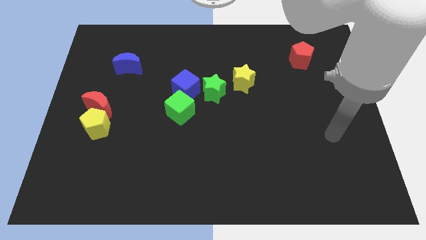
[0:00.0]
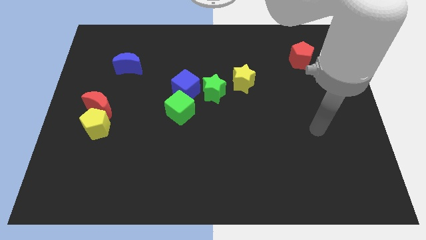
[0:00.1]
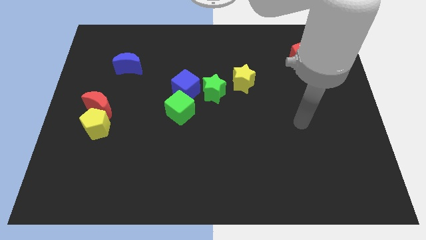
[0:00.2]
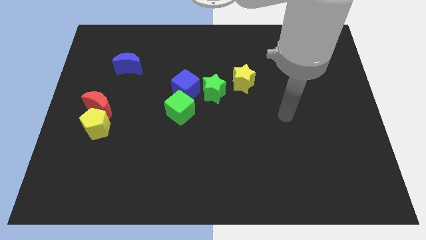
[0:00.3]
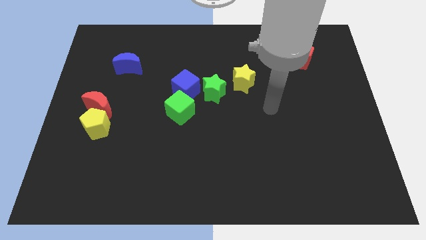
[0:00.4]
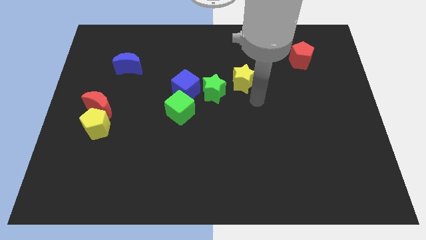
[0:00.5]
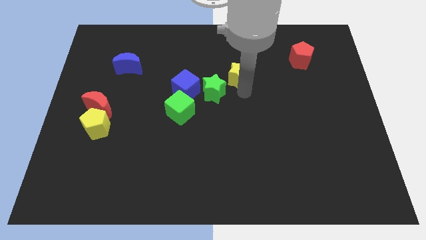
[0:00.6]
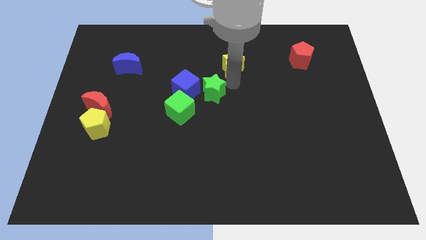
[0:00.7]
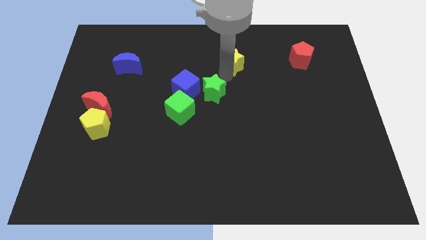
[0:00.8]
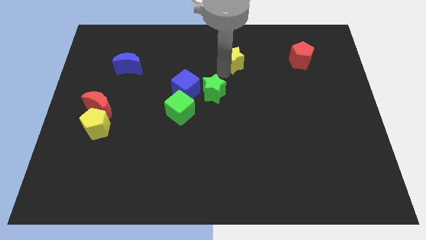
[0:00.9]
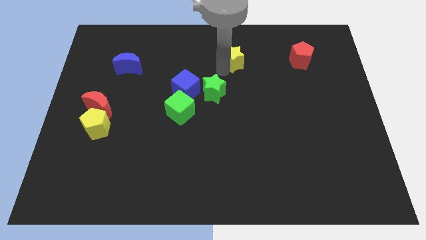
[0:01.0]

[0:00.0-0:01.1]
push the yellow star slightly up

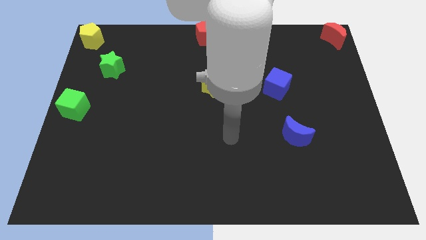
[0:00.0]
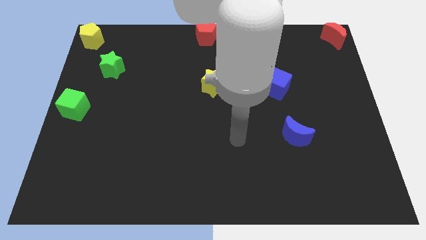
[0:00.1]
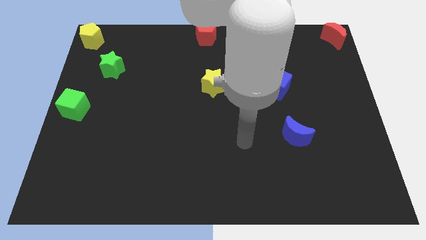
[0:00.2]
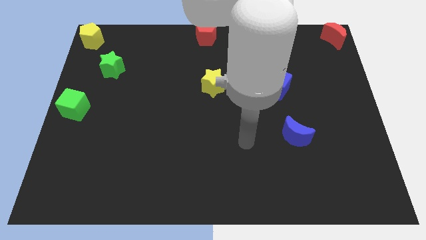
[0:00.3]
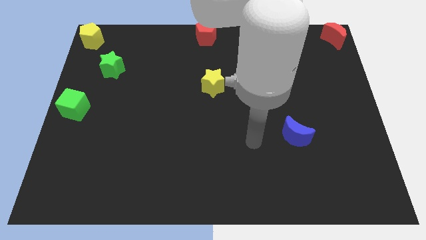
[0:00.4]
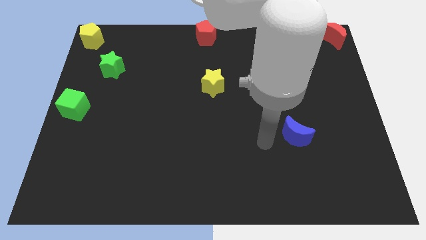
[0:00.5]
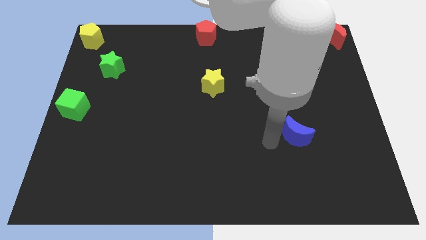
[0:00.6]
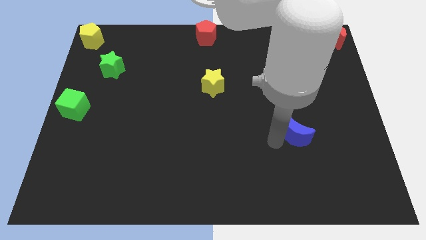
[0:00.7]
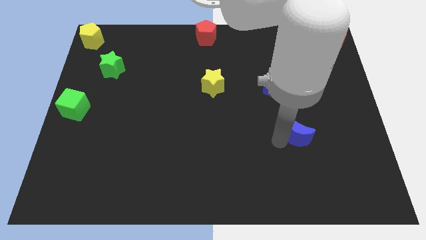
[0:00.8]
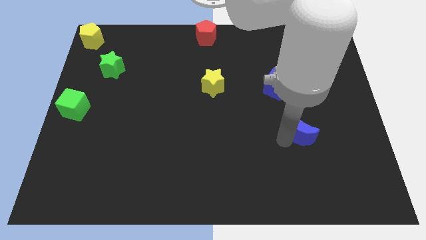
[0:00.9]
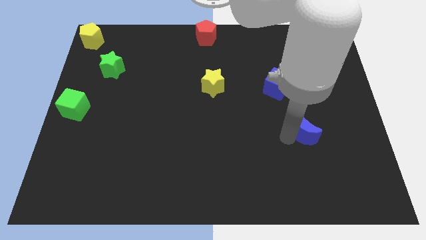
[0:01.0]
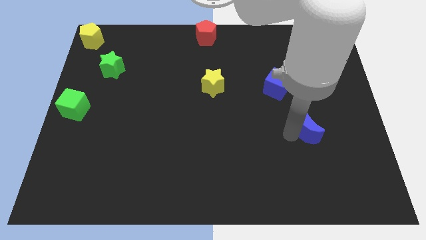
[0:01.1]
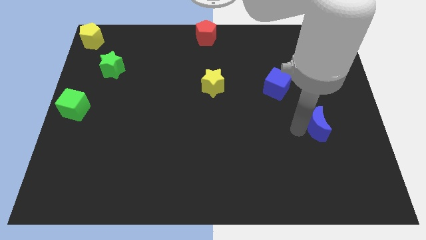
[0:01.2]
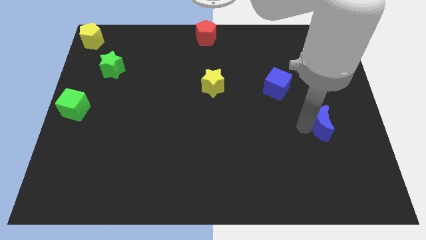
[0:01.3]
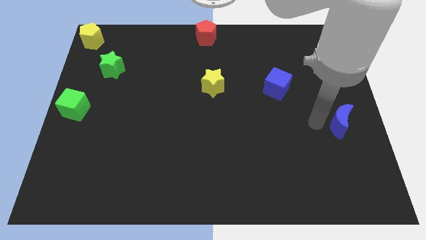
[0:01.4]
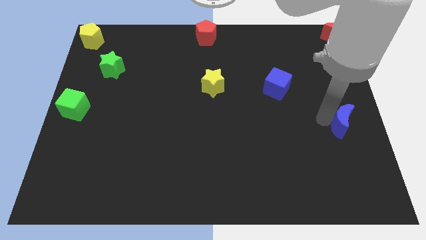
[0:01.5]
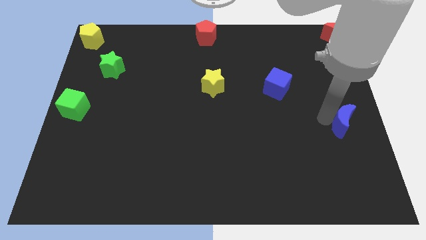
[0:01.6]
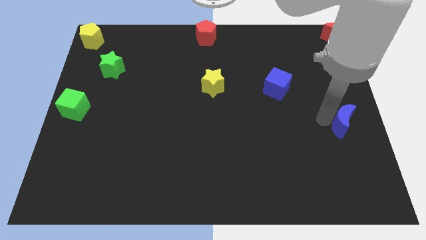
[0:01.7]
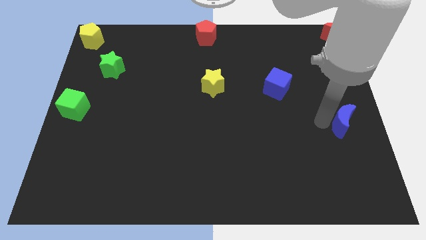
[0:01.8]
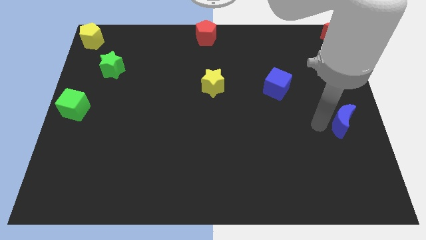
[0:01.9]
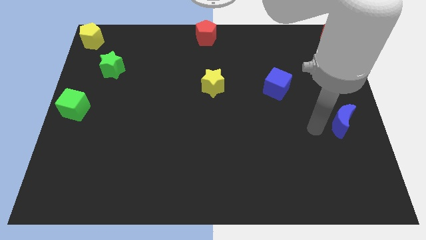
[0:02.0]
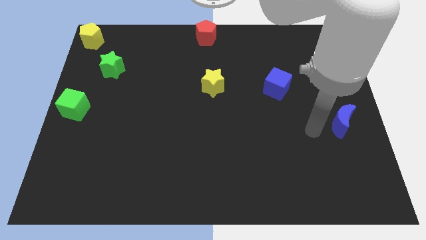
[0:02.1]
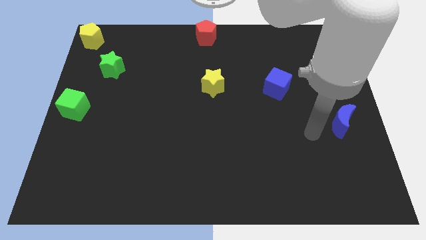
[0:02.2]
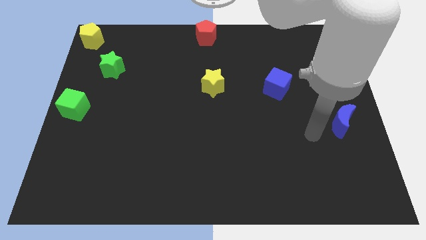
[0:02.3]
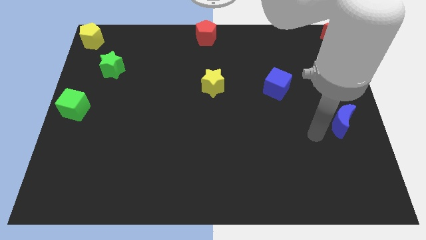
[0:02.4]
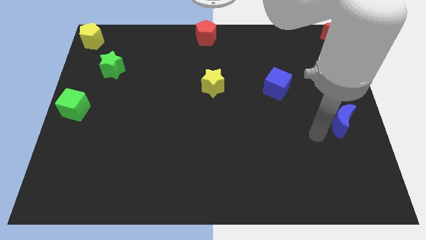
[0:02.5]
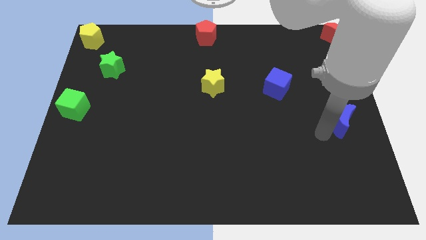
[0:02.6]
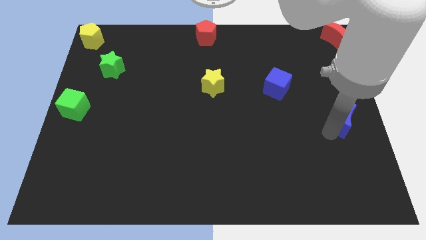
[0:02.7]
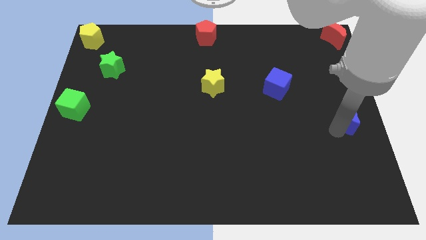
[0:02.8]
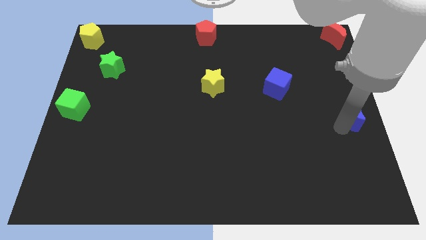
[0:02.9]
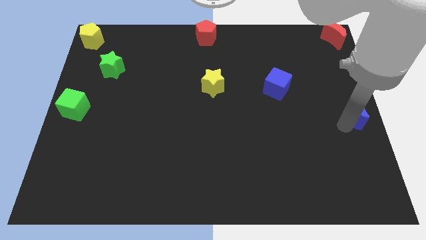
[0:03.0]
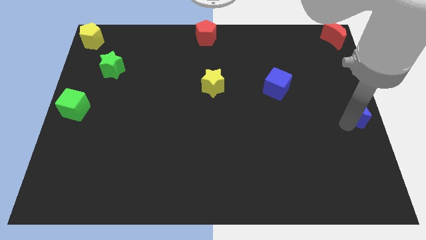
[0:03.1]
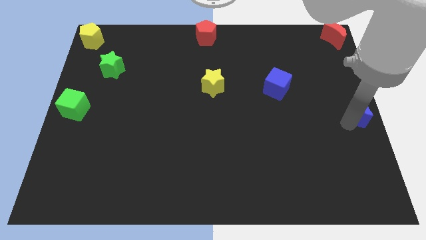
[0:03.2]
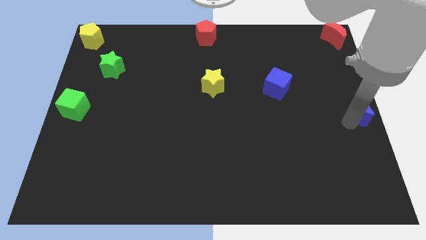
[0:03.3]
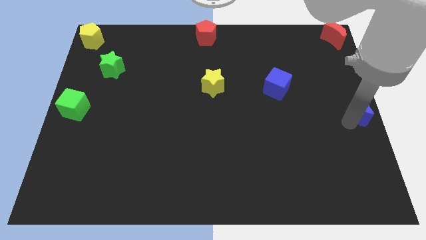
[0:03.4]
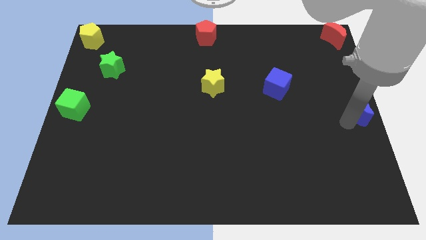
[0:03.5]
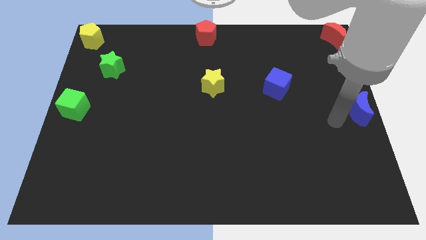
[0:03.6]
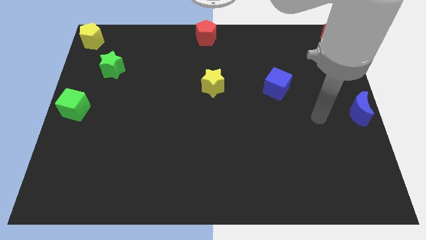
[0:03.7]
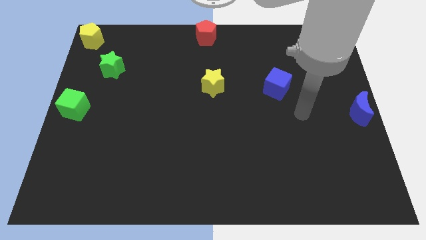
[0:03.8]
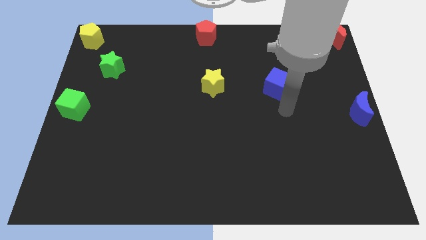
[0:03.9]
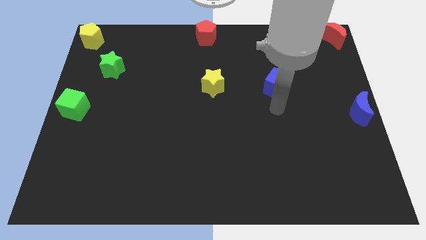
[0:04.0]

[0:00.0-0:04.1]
push the blue moon to the center right

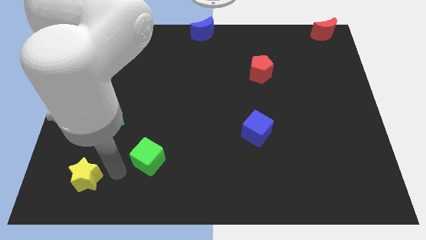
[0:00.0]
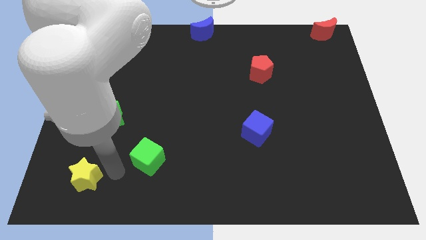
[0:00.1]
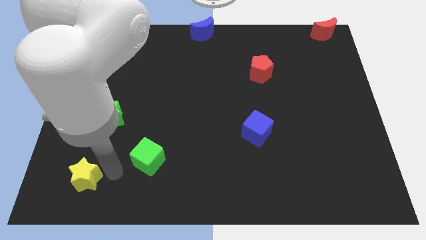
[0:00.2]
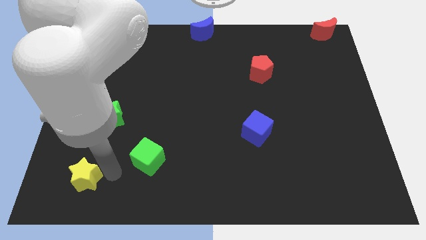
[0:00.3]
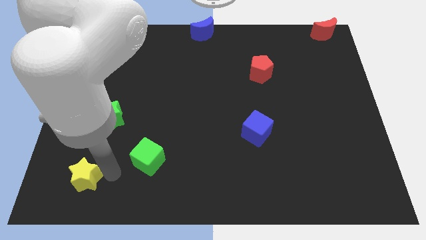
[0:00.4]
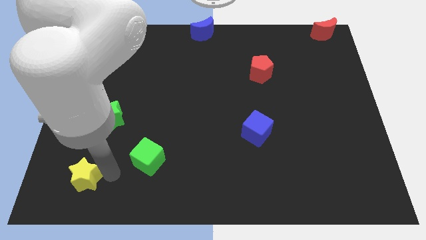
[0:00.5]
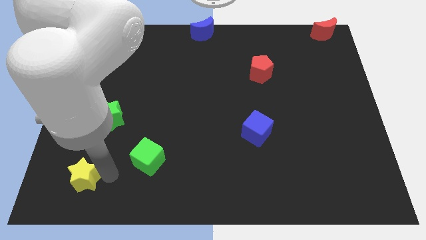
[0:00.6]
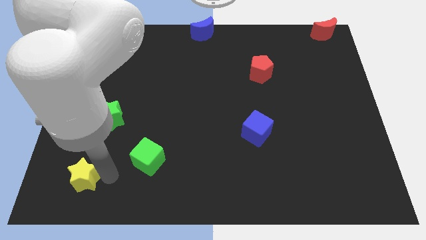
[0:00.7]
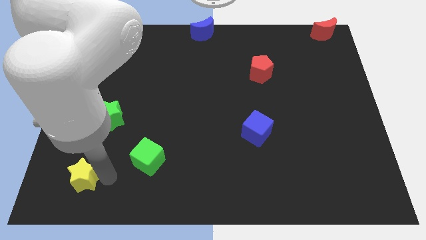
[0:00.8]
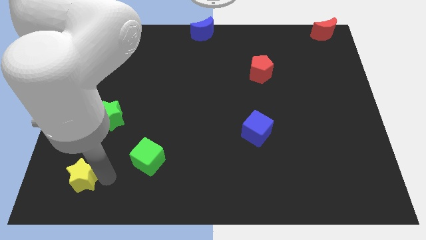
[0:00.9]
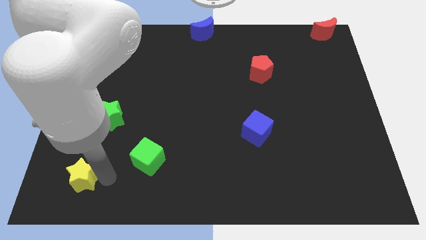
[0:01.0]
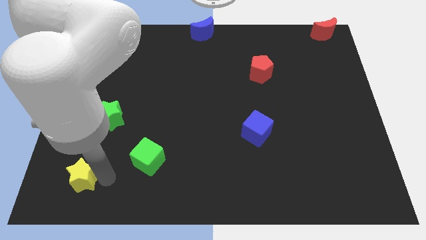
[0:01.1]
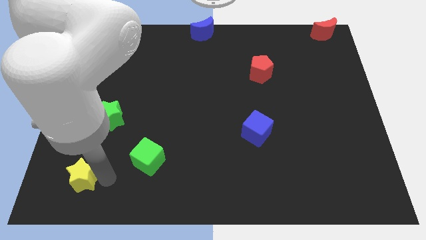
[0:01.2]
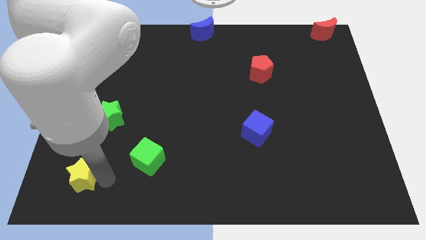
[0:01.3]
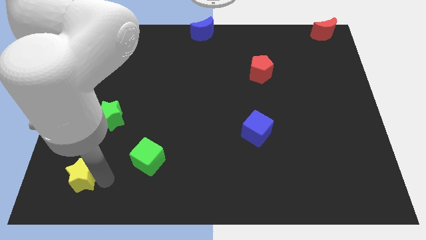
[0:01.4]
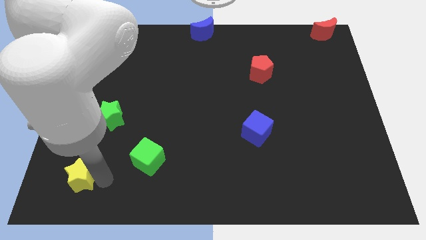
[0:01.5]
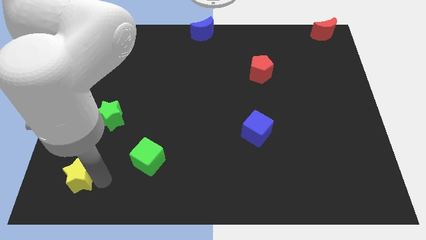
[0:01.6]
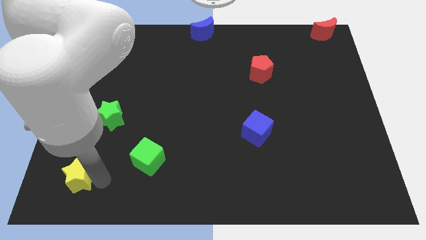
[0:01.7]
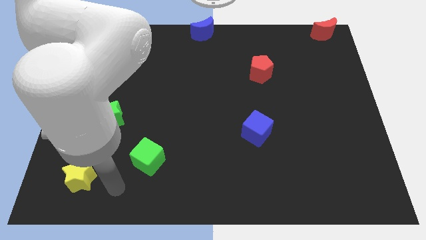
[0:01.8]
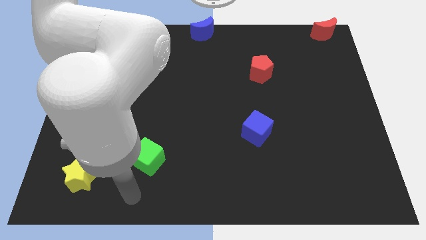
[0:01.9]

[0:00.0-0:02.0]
move yellow star slightly to the left

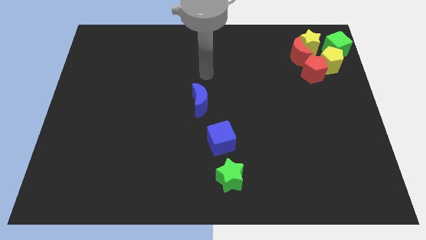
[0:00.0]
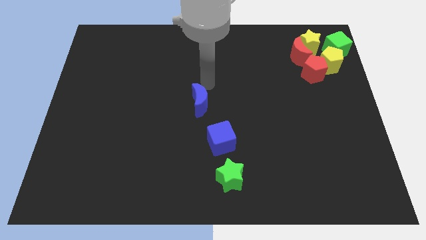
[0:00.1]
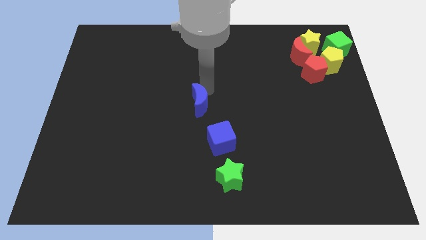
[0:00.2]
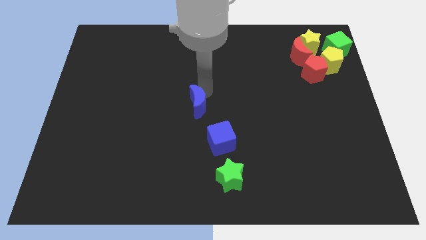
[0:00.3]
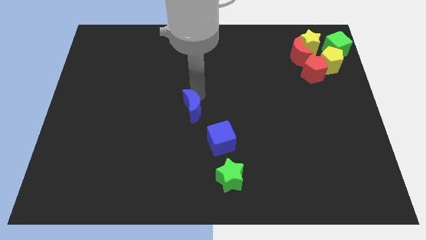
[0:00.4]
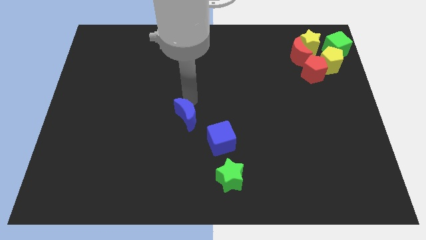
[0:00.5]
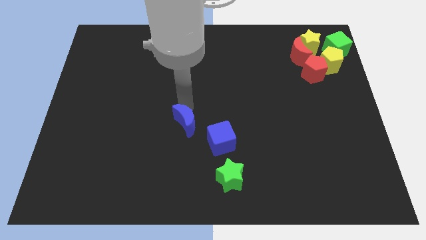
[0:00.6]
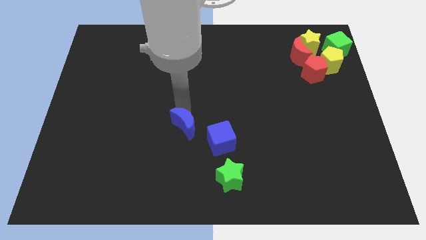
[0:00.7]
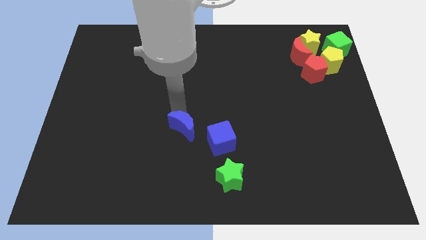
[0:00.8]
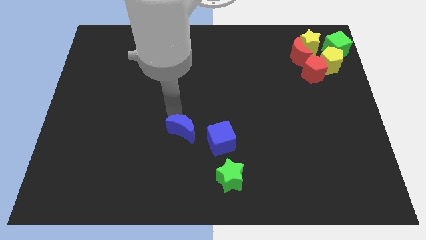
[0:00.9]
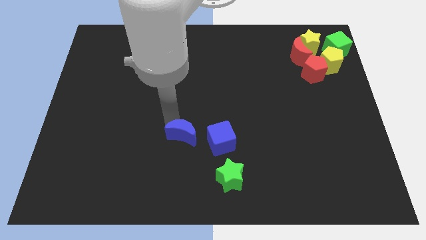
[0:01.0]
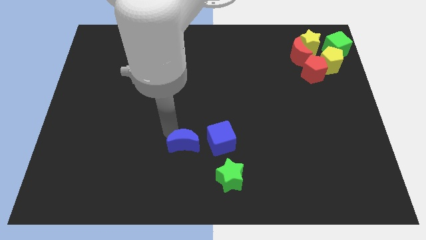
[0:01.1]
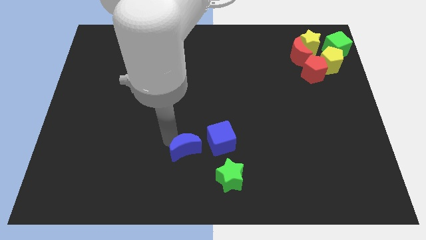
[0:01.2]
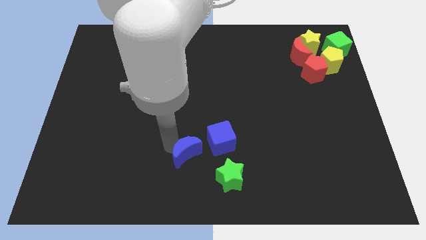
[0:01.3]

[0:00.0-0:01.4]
place blue moon to the left side of the blue cube

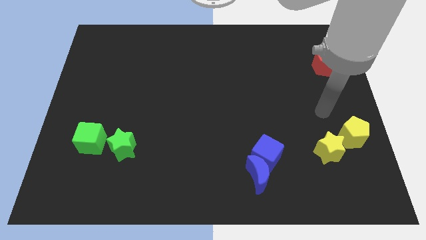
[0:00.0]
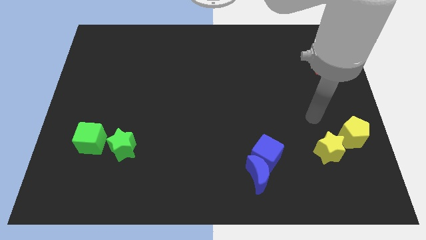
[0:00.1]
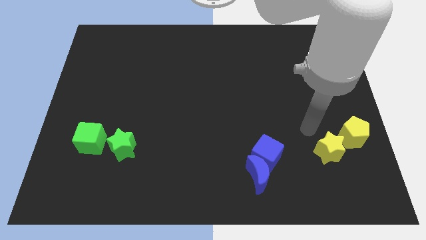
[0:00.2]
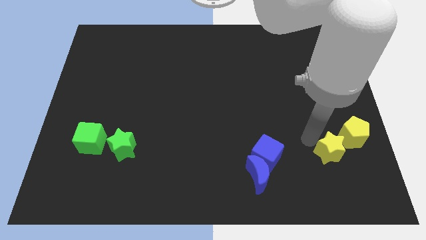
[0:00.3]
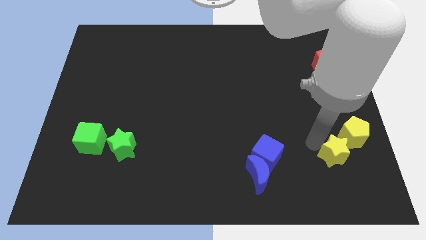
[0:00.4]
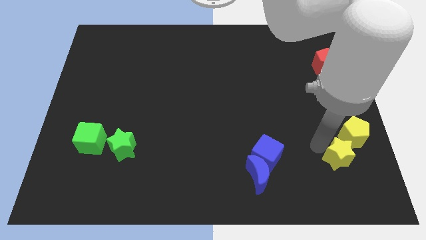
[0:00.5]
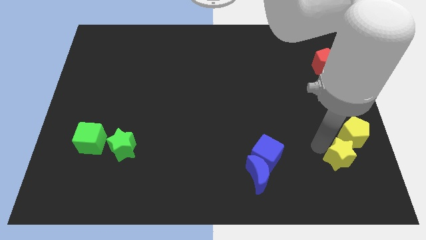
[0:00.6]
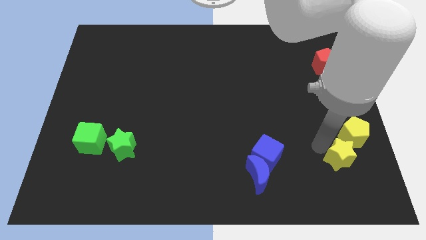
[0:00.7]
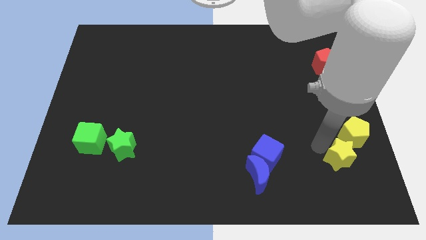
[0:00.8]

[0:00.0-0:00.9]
slightly push the yellow star towards right
